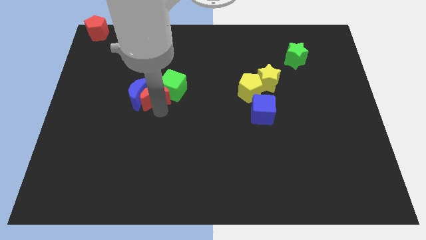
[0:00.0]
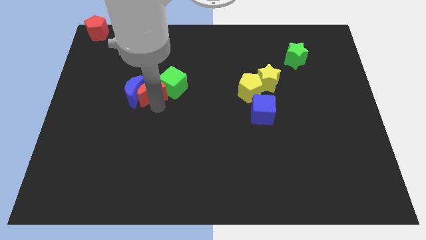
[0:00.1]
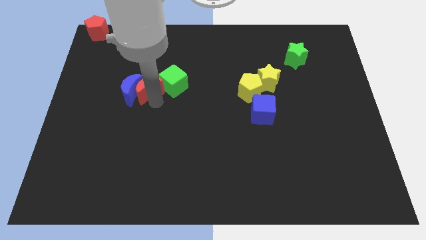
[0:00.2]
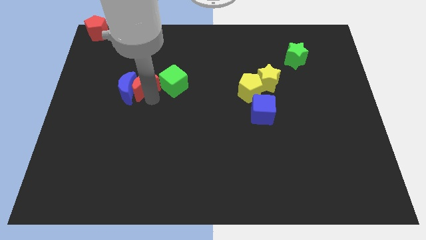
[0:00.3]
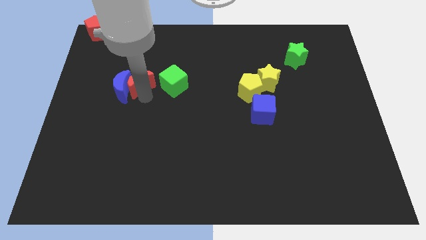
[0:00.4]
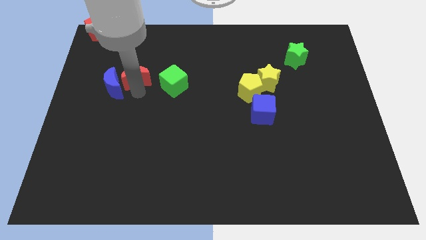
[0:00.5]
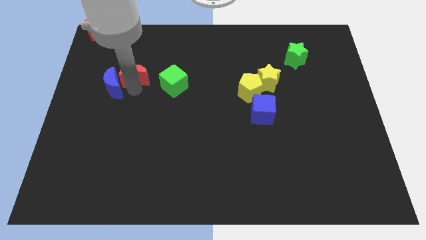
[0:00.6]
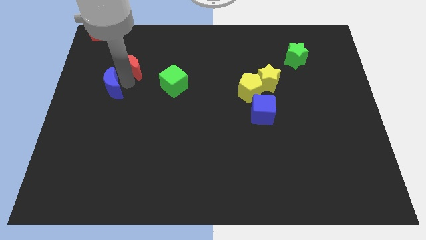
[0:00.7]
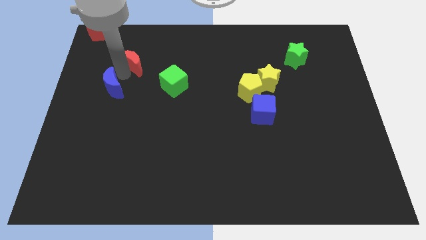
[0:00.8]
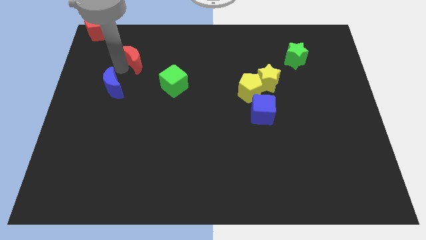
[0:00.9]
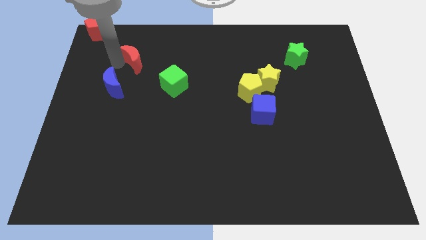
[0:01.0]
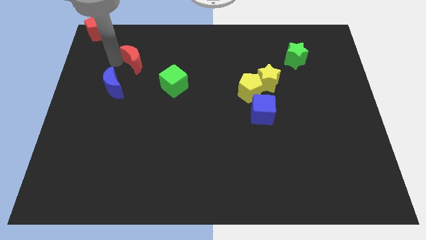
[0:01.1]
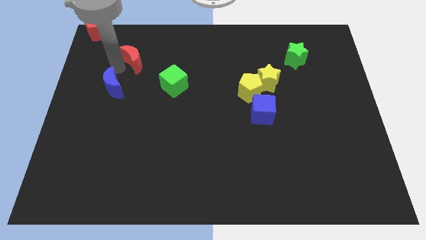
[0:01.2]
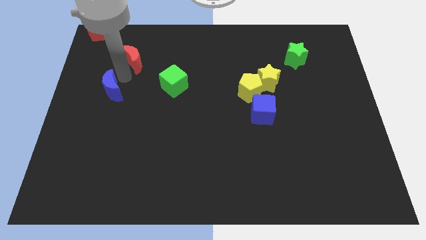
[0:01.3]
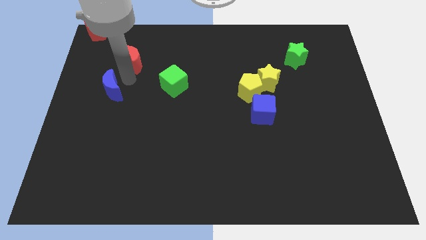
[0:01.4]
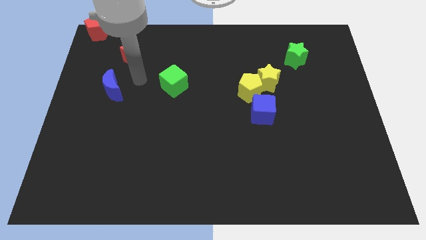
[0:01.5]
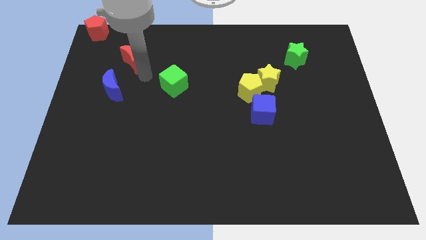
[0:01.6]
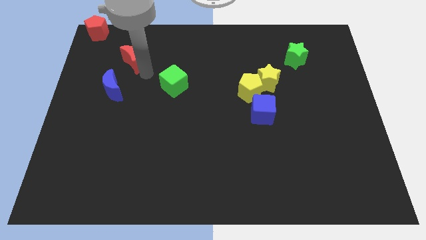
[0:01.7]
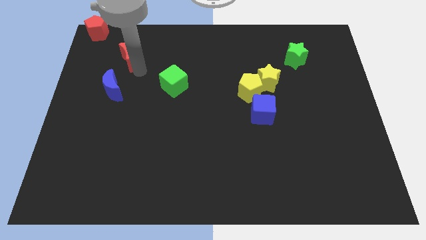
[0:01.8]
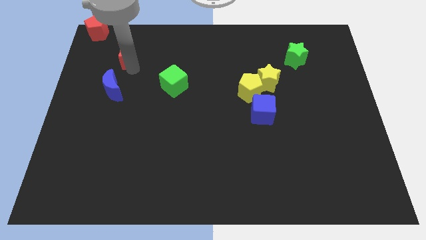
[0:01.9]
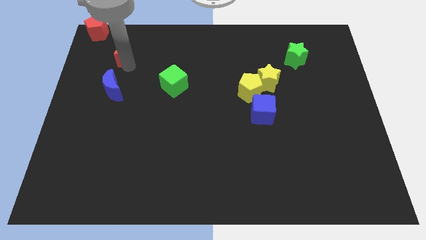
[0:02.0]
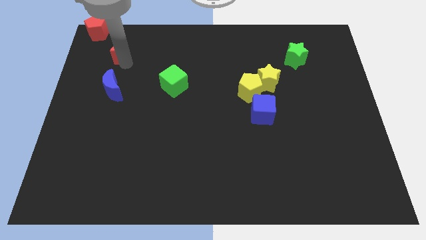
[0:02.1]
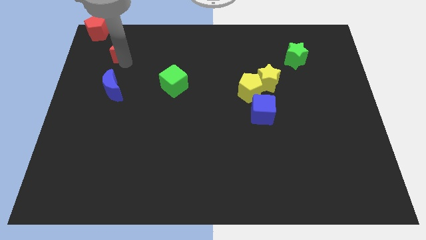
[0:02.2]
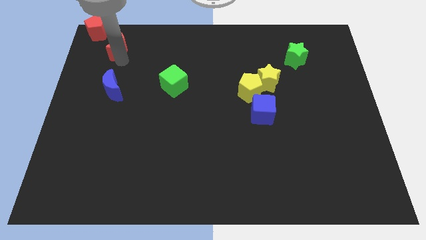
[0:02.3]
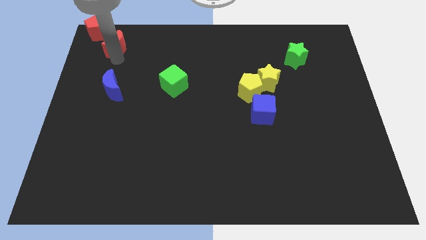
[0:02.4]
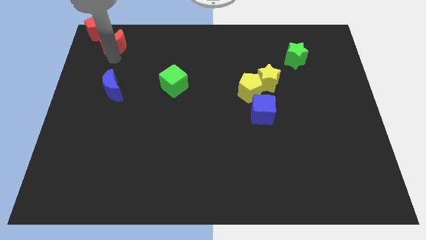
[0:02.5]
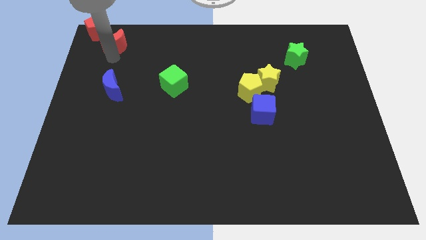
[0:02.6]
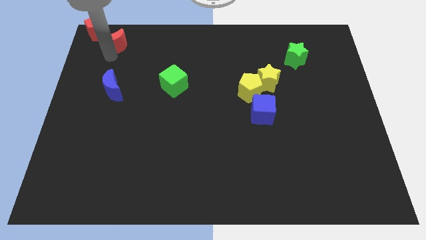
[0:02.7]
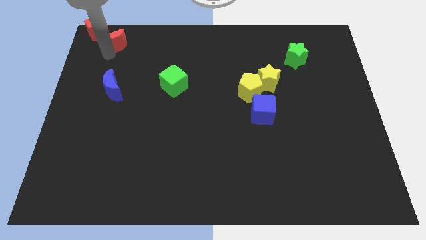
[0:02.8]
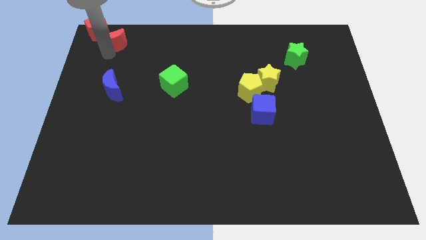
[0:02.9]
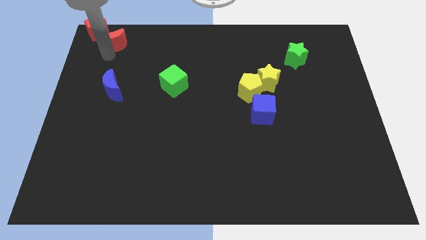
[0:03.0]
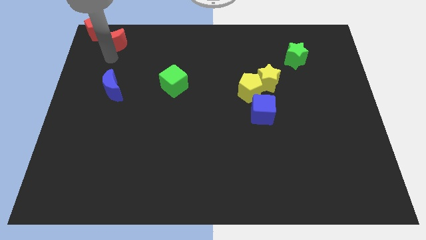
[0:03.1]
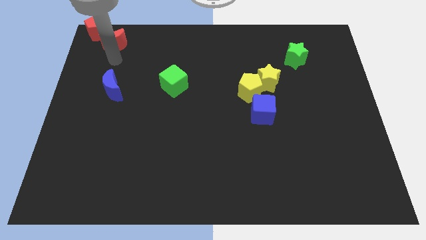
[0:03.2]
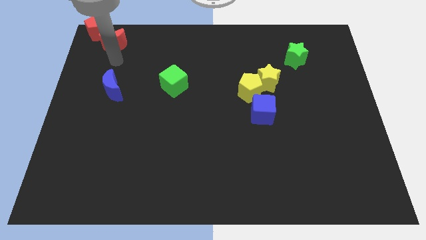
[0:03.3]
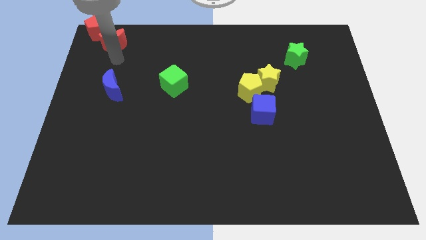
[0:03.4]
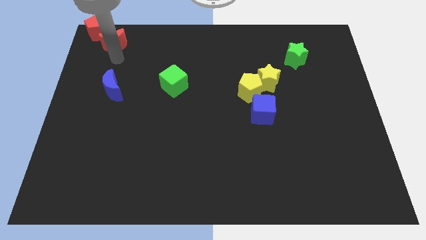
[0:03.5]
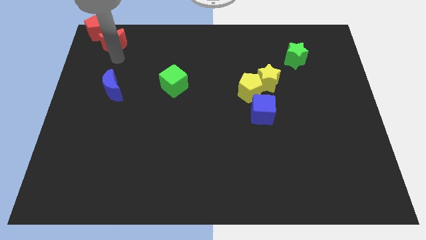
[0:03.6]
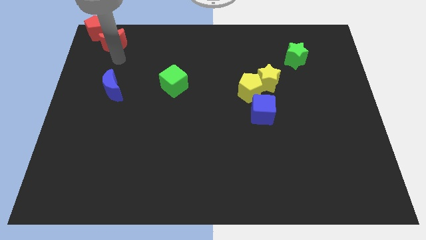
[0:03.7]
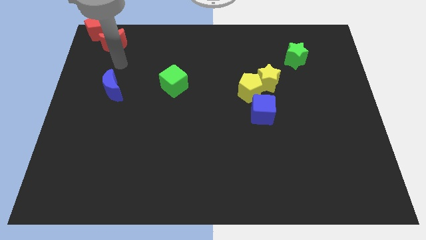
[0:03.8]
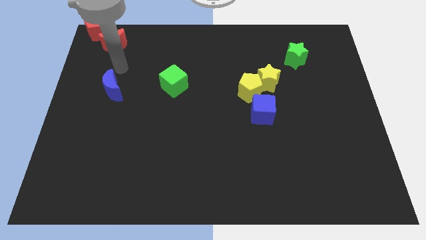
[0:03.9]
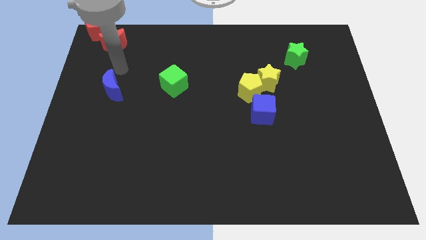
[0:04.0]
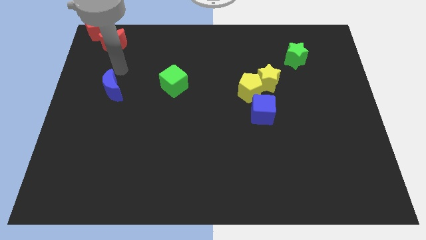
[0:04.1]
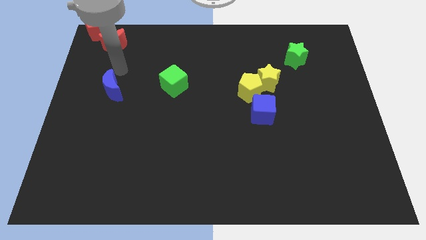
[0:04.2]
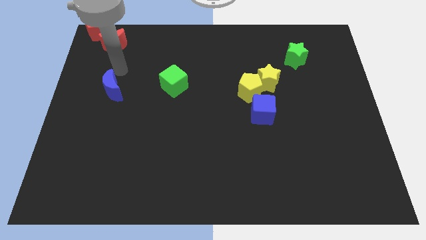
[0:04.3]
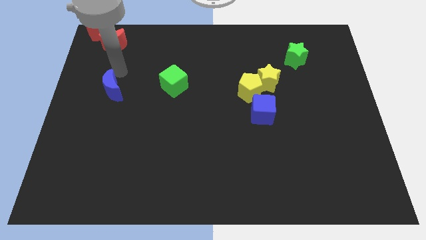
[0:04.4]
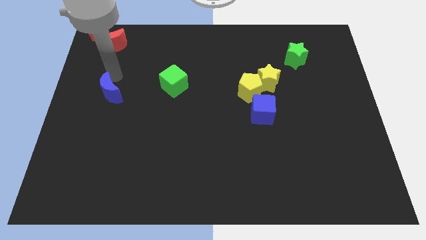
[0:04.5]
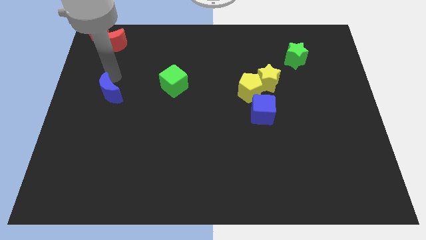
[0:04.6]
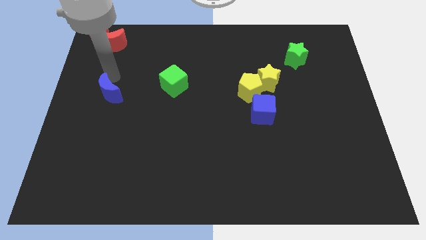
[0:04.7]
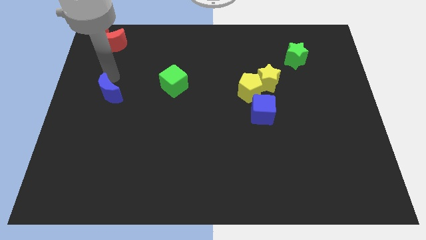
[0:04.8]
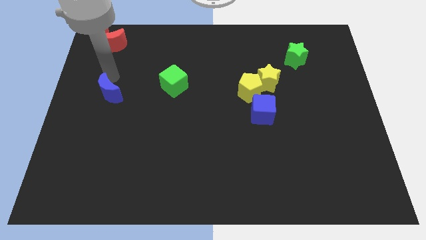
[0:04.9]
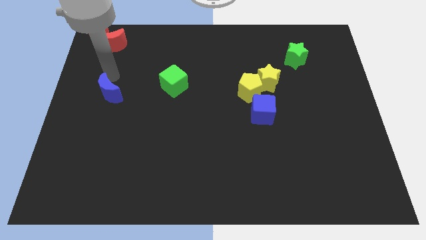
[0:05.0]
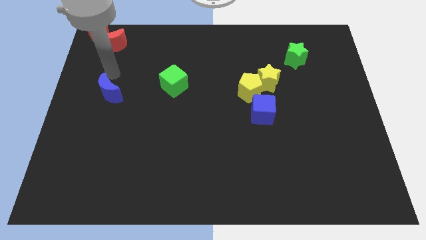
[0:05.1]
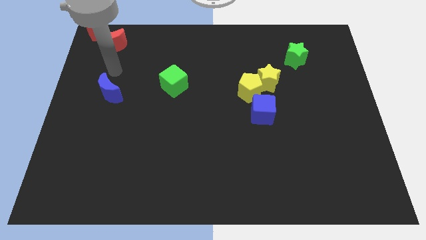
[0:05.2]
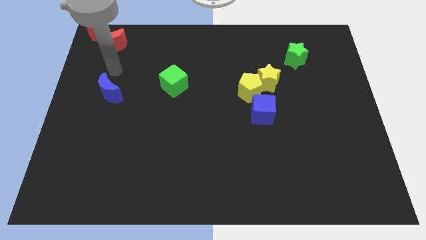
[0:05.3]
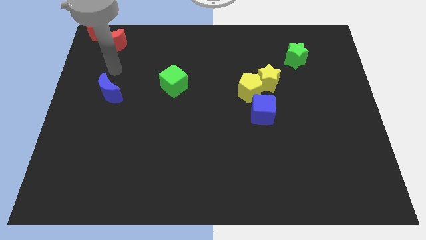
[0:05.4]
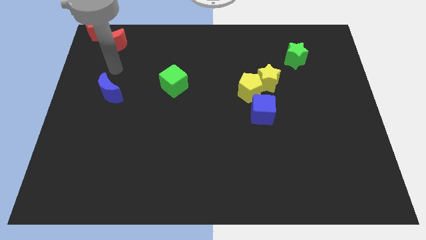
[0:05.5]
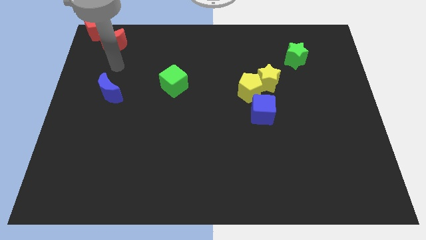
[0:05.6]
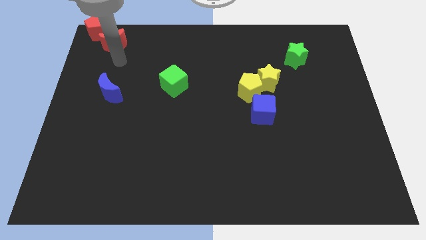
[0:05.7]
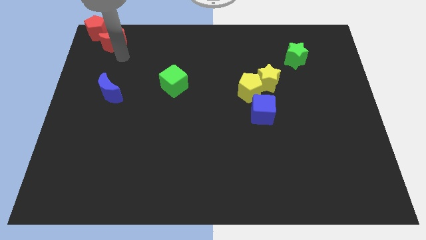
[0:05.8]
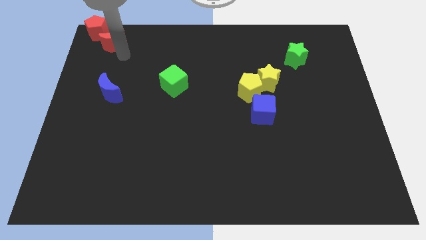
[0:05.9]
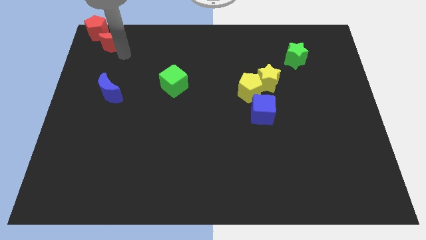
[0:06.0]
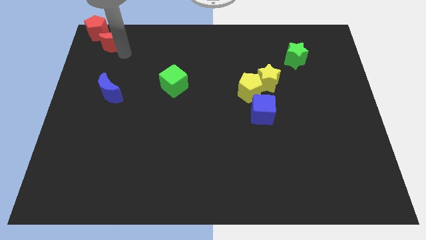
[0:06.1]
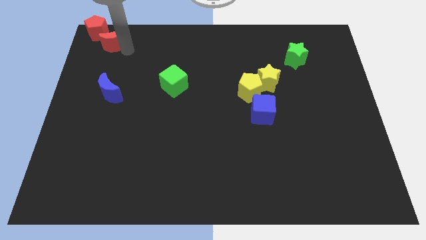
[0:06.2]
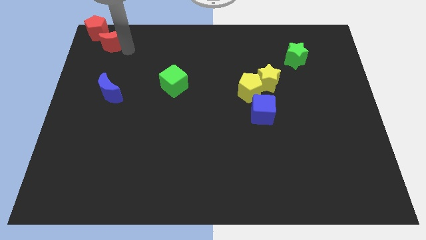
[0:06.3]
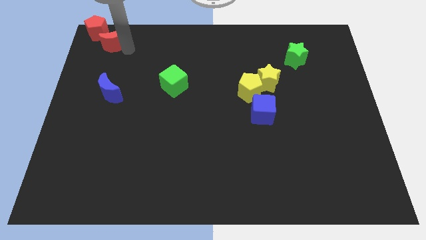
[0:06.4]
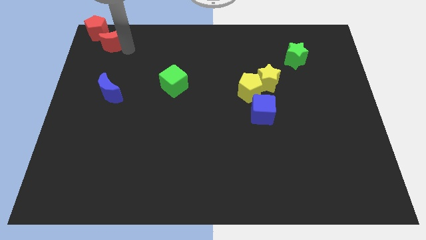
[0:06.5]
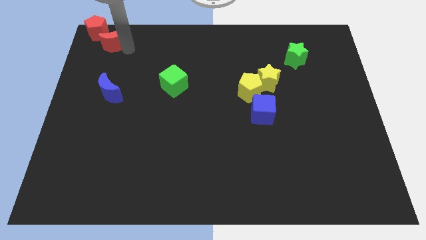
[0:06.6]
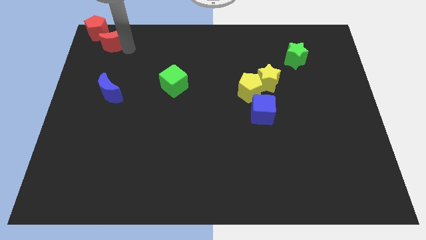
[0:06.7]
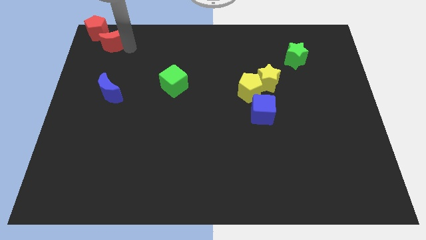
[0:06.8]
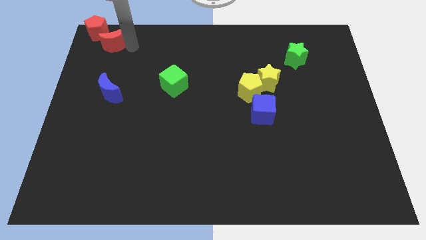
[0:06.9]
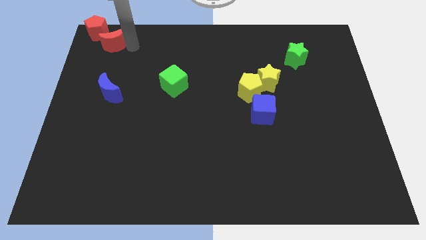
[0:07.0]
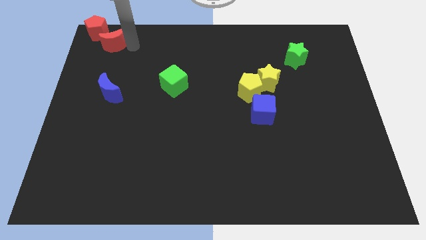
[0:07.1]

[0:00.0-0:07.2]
place the red moon to the right side of the red pentagon

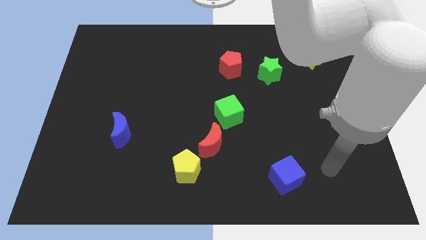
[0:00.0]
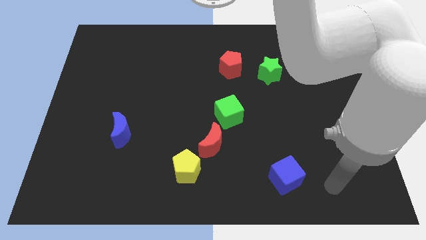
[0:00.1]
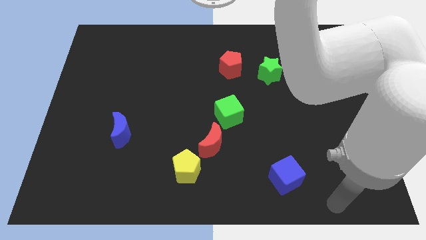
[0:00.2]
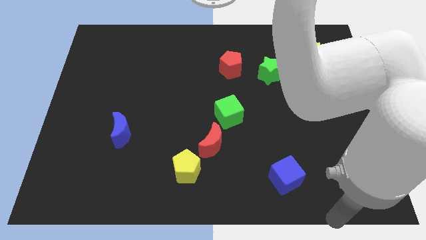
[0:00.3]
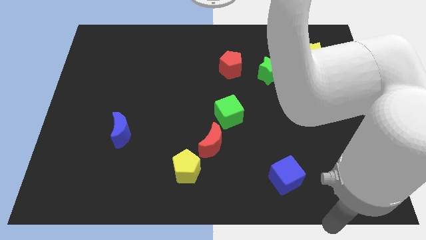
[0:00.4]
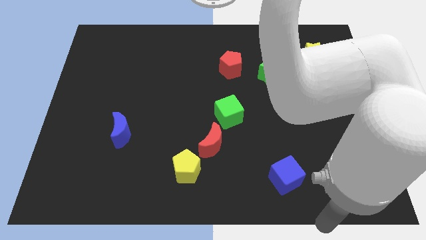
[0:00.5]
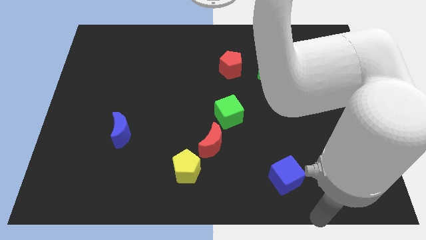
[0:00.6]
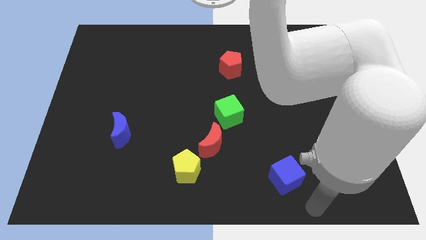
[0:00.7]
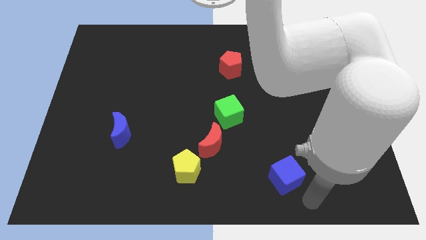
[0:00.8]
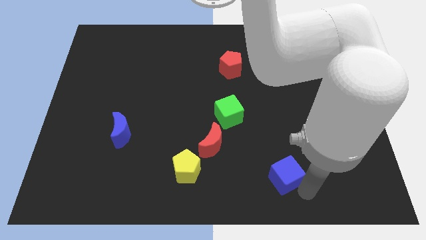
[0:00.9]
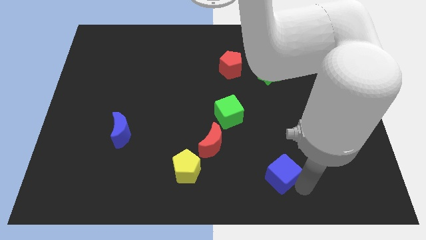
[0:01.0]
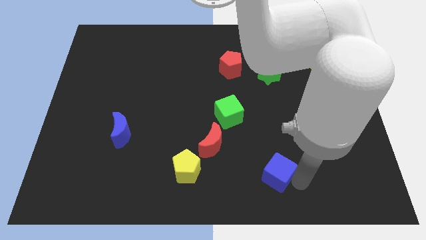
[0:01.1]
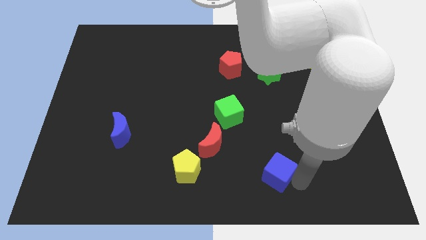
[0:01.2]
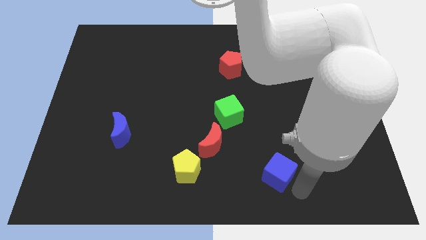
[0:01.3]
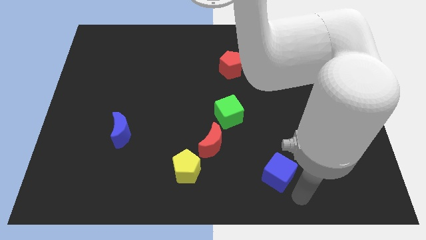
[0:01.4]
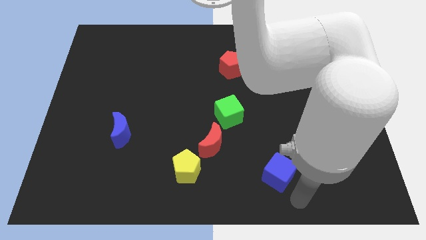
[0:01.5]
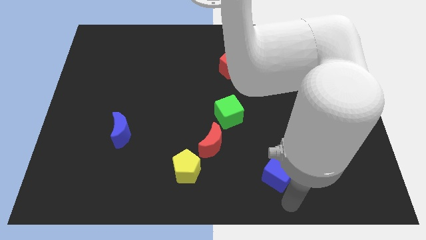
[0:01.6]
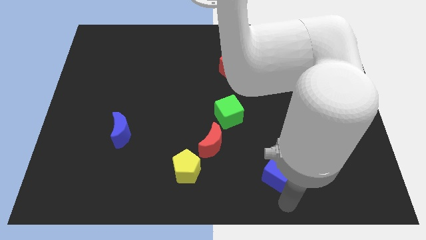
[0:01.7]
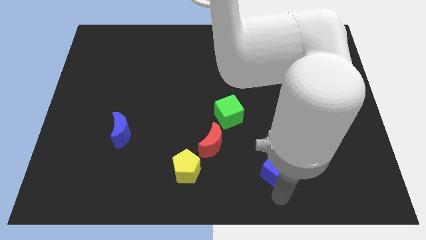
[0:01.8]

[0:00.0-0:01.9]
place the blue cube horizontally to the right side of the yellow pentagon
